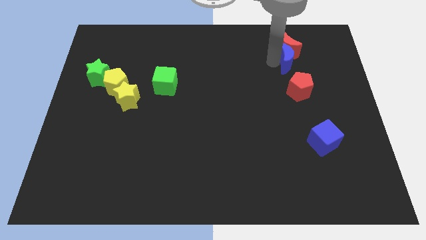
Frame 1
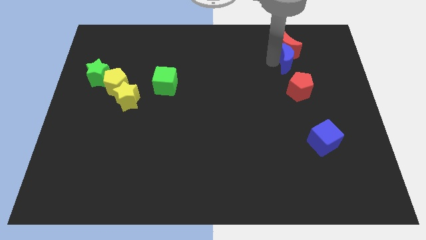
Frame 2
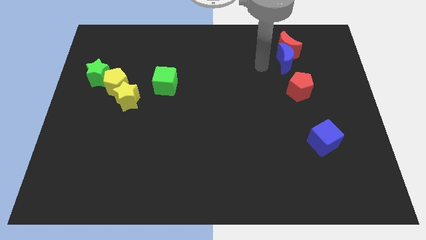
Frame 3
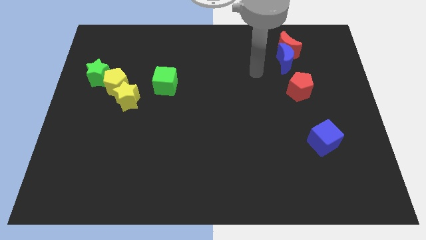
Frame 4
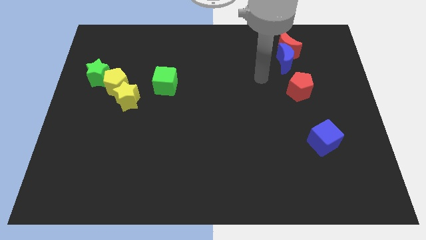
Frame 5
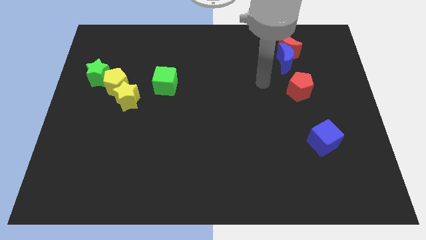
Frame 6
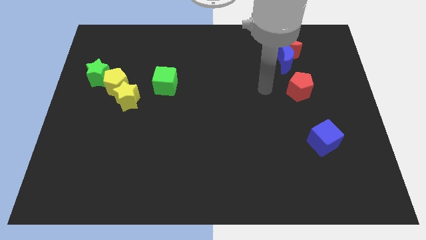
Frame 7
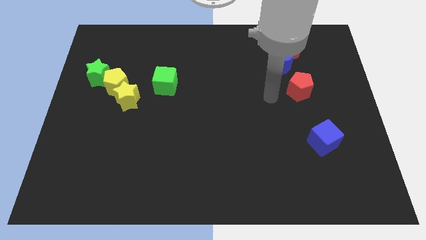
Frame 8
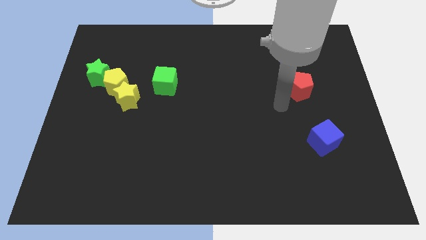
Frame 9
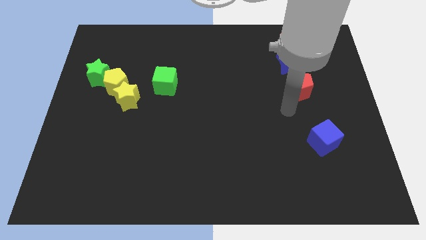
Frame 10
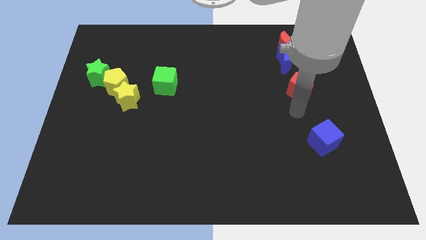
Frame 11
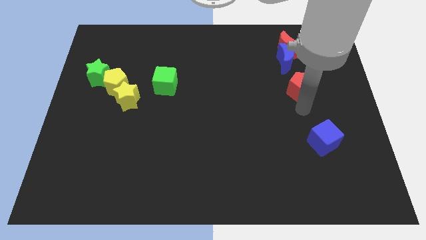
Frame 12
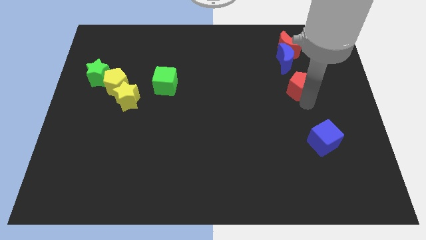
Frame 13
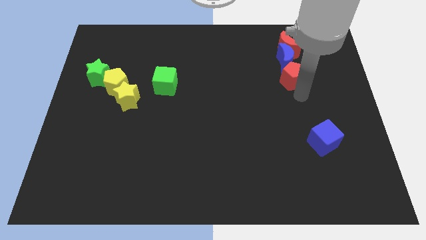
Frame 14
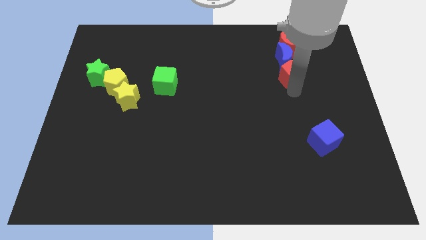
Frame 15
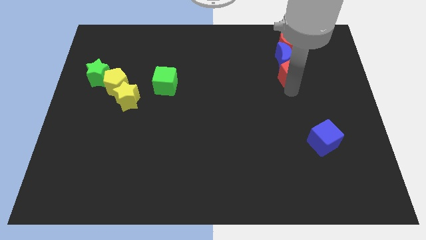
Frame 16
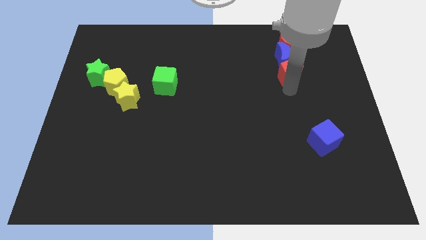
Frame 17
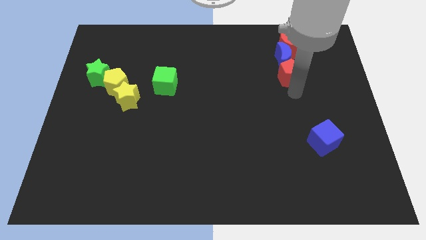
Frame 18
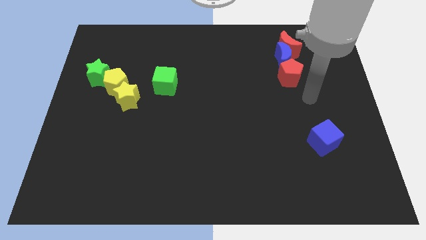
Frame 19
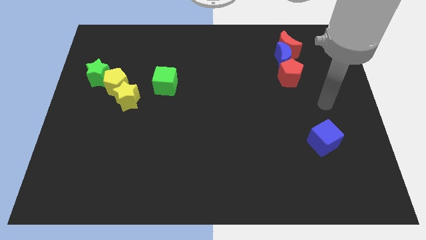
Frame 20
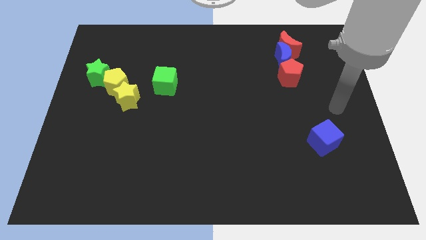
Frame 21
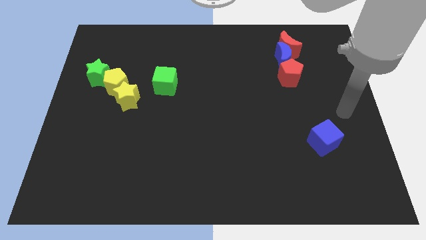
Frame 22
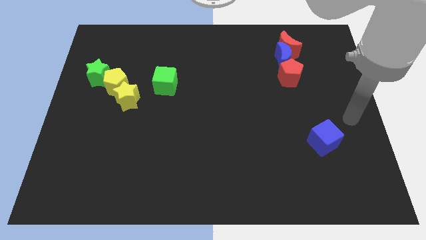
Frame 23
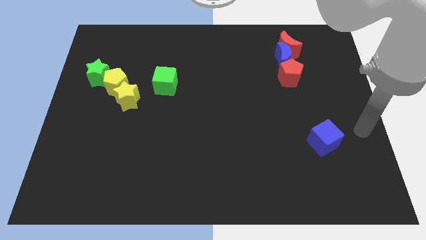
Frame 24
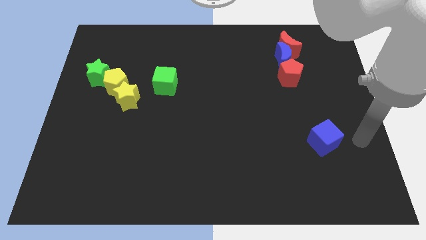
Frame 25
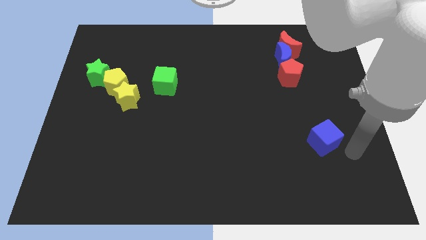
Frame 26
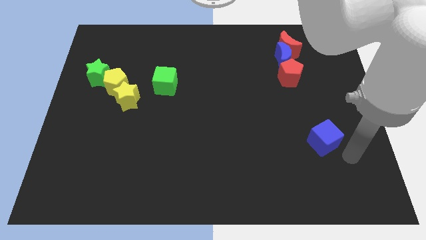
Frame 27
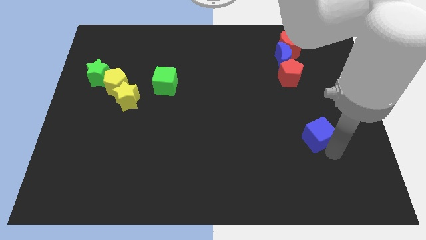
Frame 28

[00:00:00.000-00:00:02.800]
move the red pentagon near to the blue moon

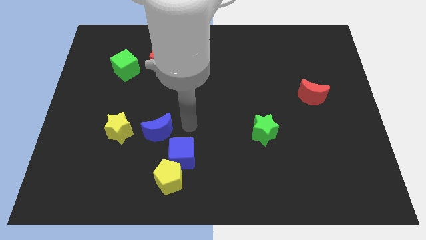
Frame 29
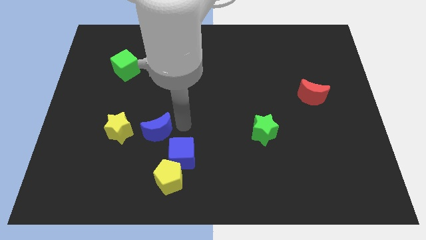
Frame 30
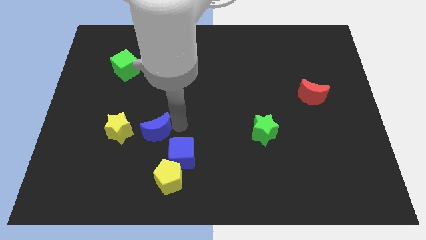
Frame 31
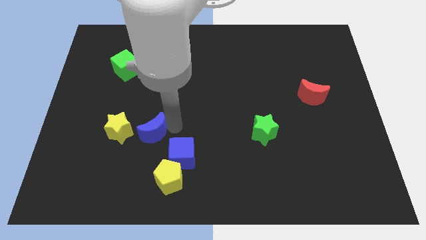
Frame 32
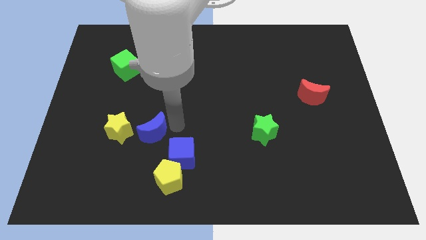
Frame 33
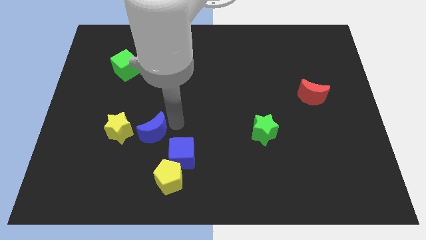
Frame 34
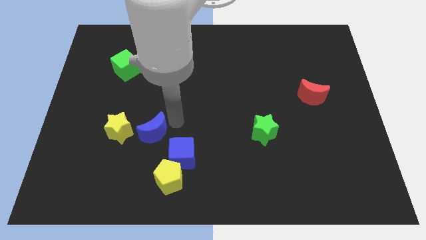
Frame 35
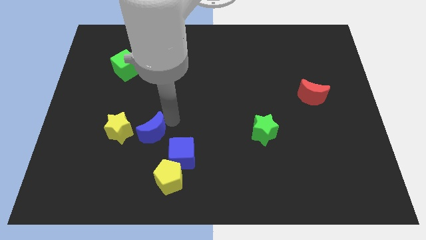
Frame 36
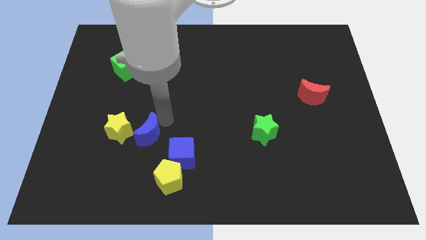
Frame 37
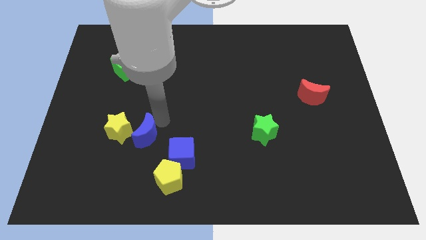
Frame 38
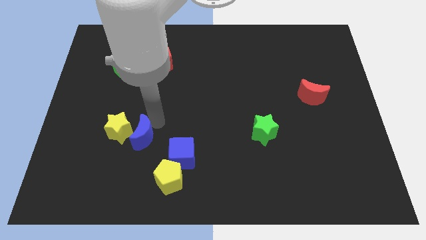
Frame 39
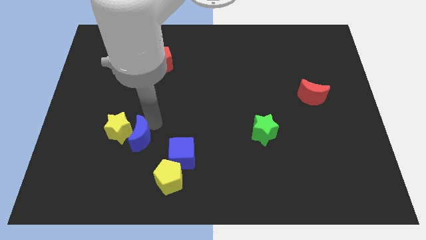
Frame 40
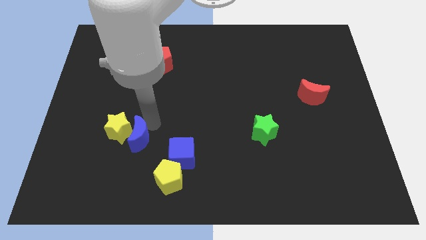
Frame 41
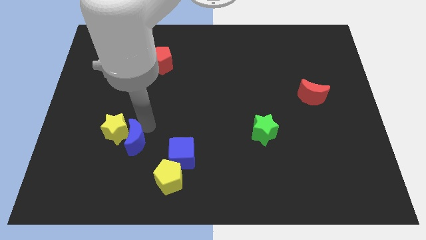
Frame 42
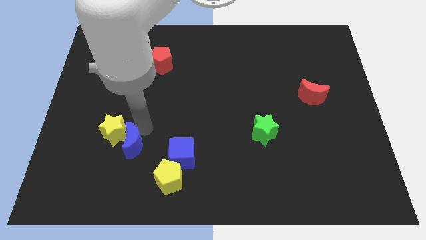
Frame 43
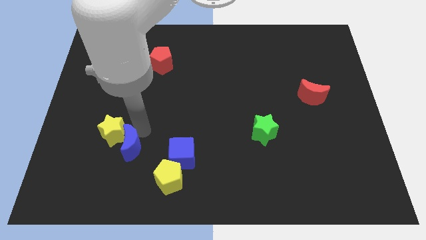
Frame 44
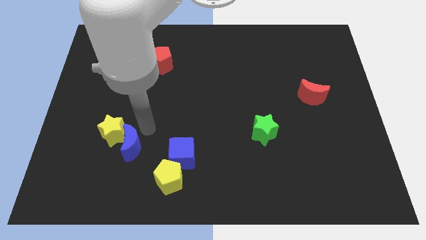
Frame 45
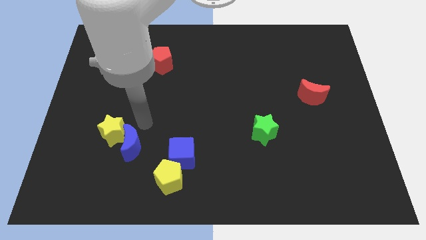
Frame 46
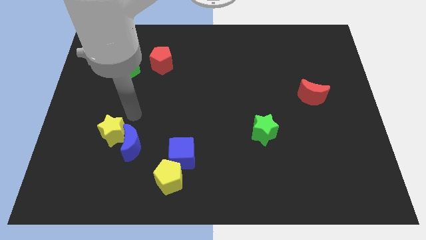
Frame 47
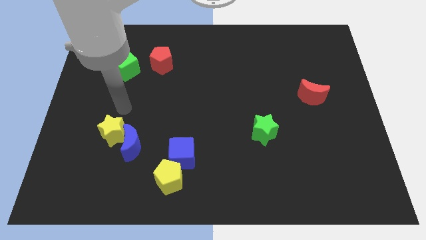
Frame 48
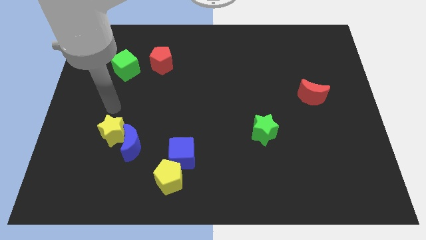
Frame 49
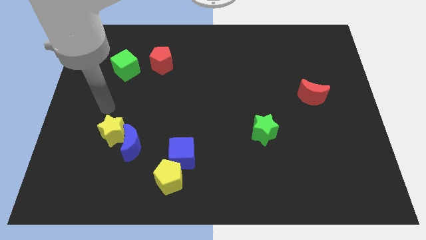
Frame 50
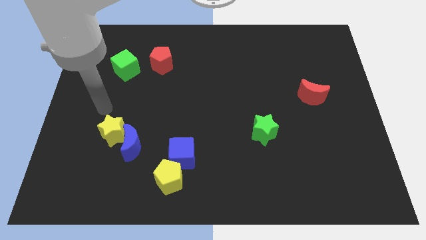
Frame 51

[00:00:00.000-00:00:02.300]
place blue moon to the right of yellow star

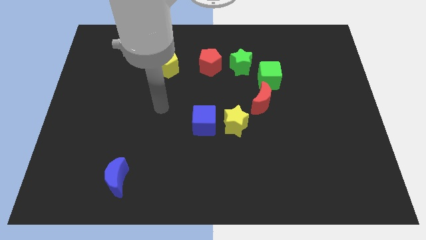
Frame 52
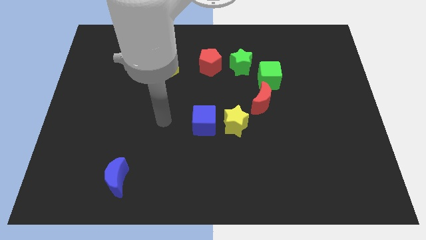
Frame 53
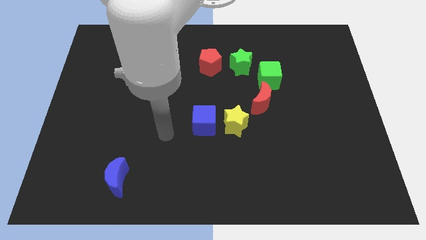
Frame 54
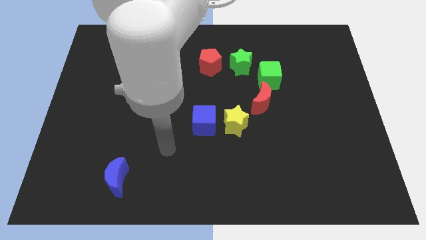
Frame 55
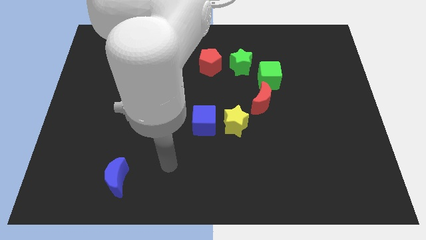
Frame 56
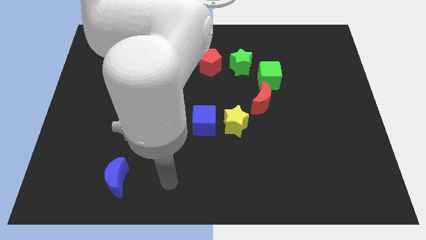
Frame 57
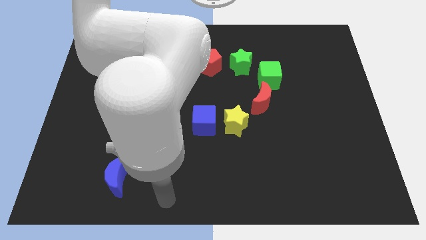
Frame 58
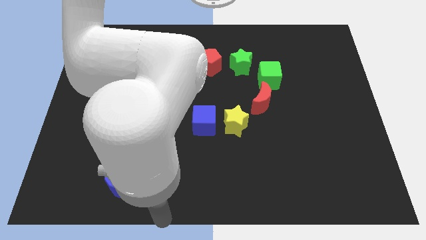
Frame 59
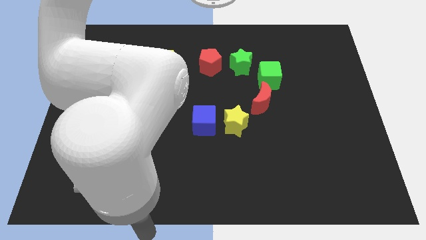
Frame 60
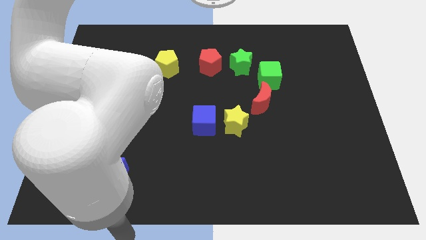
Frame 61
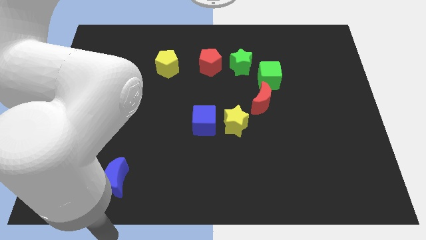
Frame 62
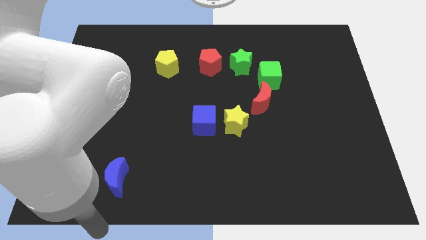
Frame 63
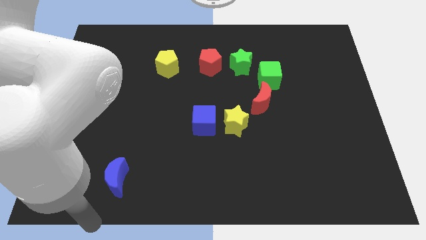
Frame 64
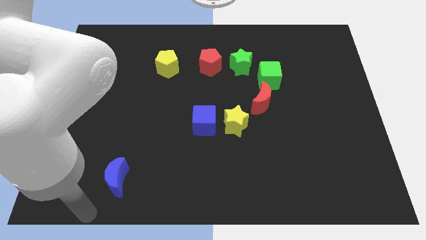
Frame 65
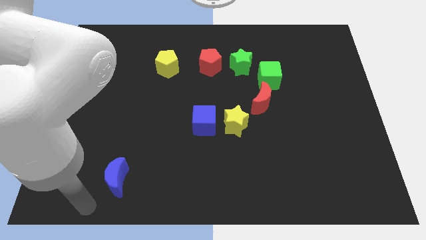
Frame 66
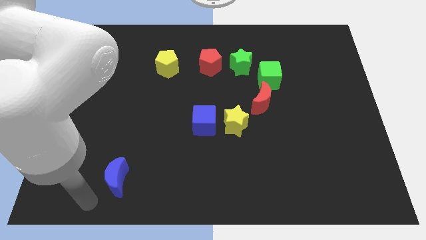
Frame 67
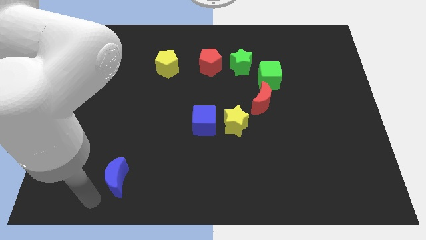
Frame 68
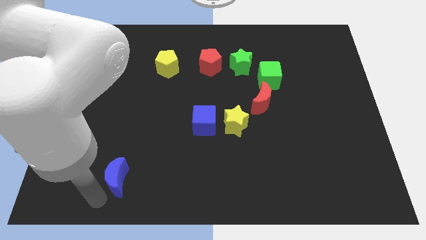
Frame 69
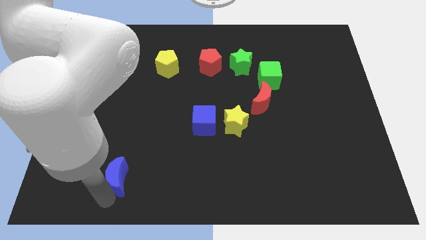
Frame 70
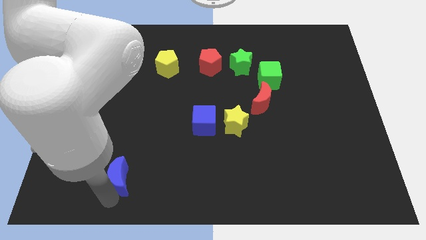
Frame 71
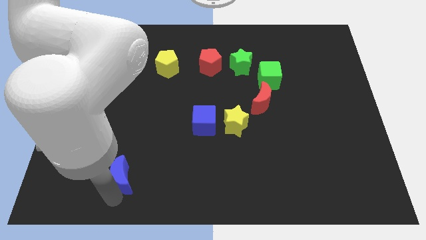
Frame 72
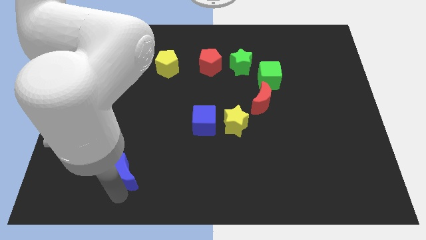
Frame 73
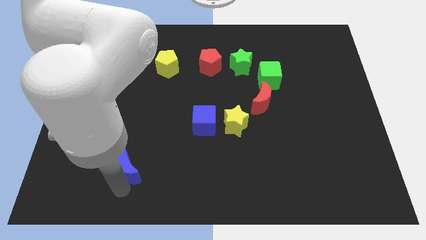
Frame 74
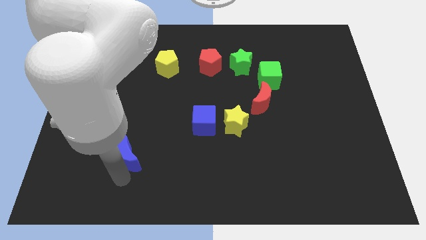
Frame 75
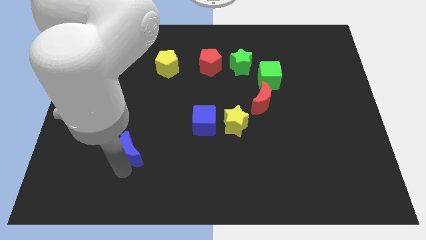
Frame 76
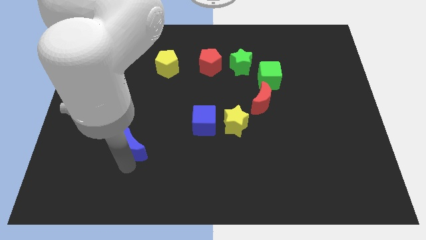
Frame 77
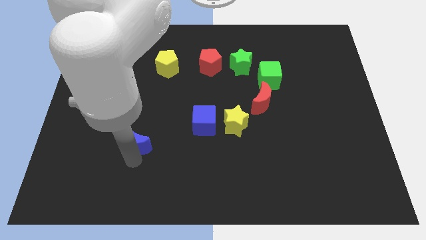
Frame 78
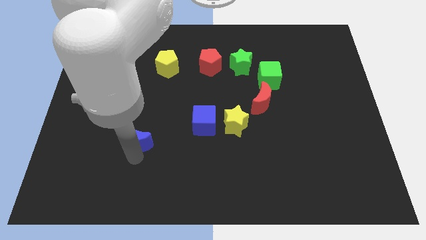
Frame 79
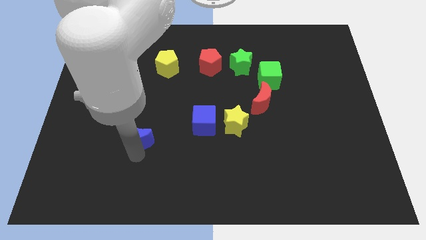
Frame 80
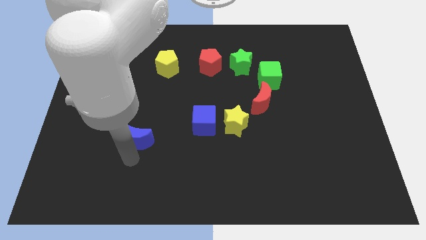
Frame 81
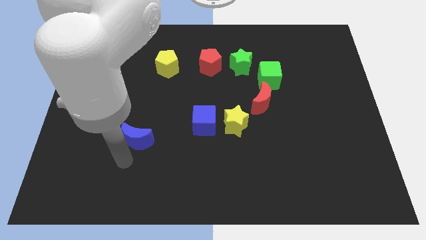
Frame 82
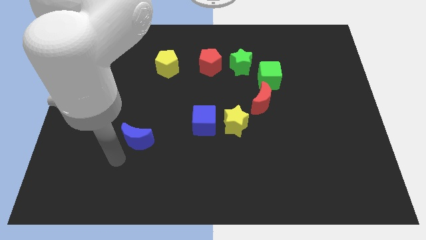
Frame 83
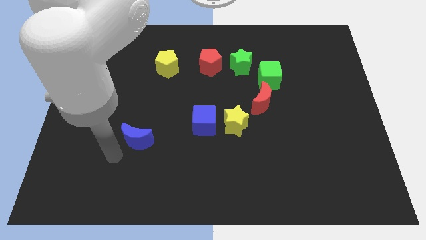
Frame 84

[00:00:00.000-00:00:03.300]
slide the blue moon towards the center

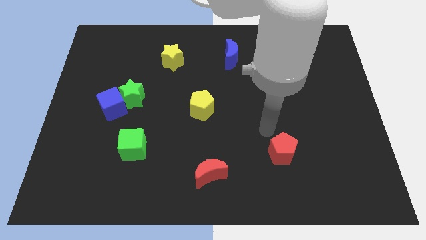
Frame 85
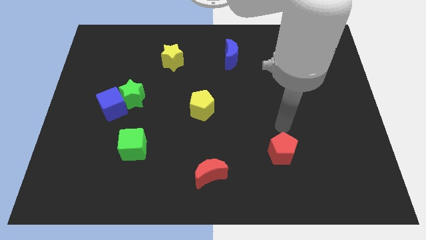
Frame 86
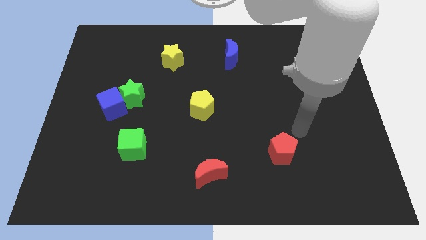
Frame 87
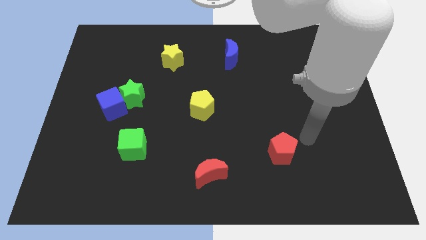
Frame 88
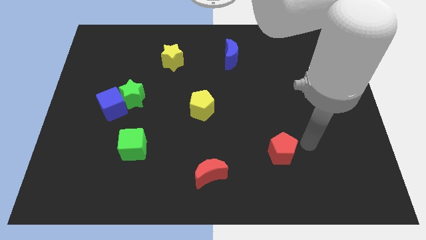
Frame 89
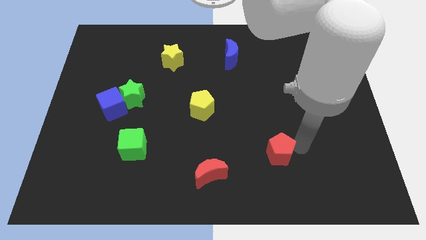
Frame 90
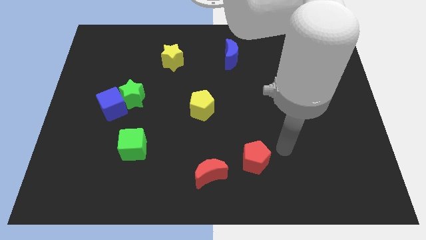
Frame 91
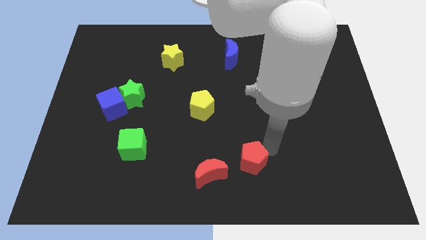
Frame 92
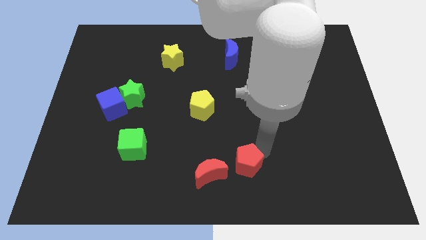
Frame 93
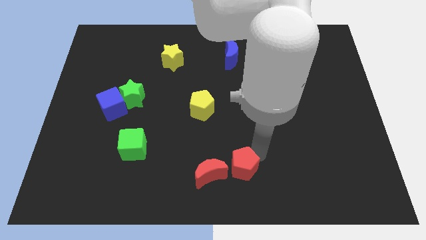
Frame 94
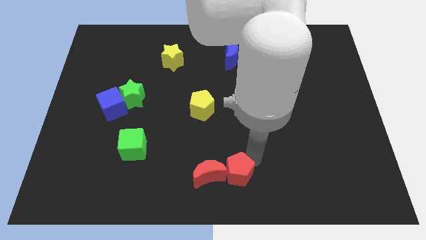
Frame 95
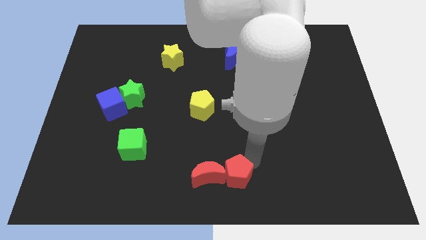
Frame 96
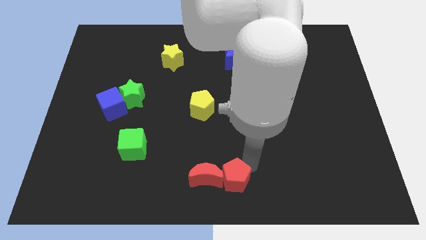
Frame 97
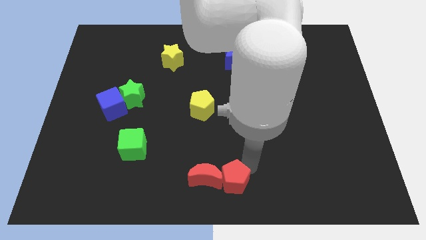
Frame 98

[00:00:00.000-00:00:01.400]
push the red pentagon to the right of the red crescent
